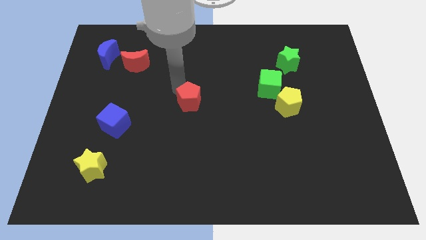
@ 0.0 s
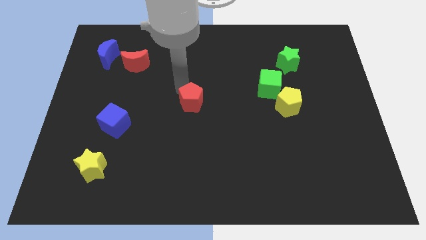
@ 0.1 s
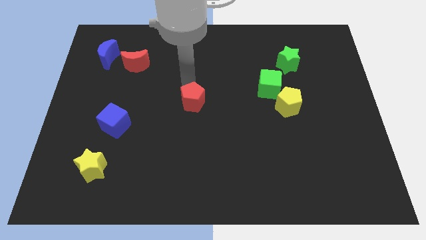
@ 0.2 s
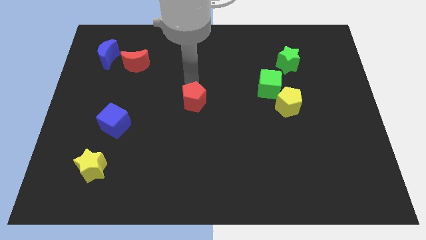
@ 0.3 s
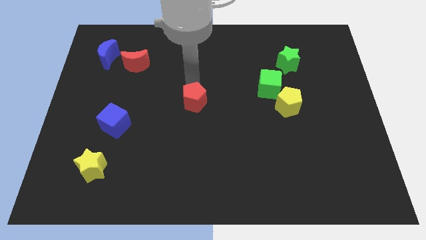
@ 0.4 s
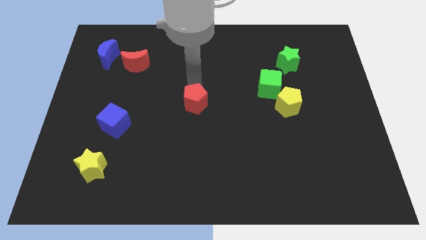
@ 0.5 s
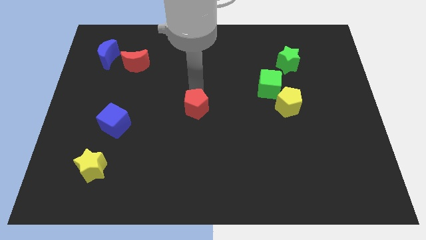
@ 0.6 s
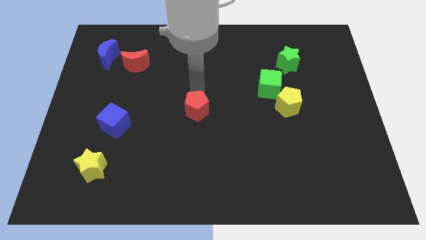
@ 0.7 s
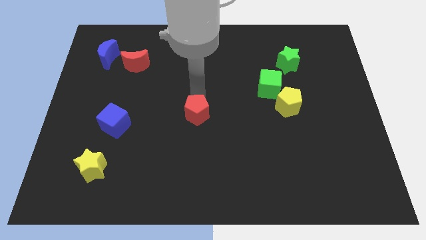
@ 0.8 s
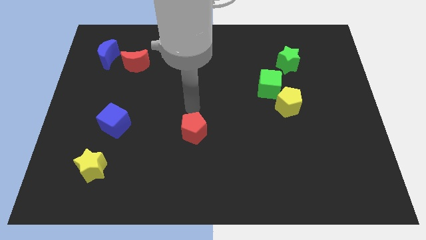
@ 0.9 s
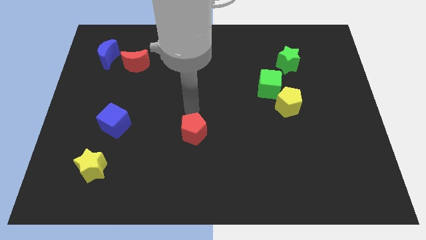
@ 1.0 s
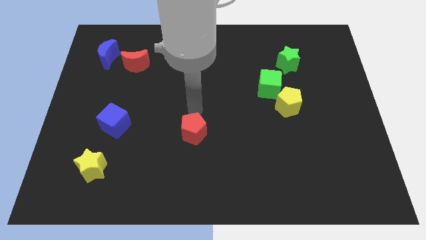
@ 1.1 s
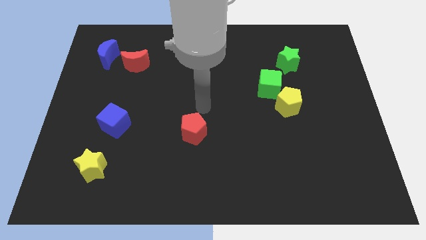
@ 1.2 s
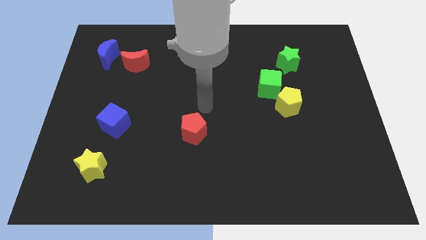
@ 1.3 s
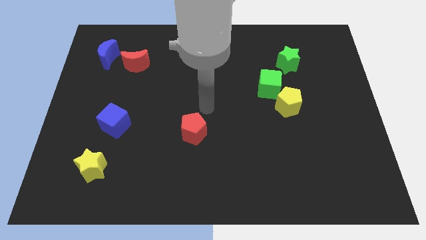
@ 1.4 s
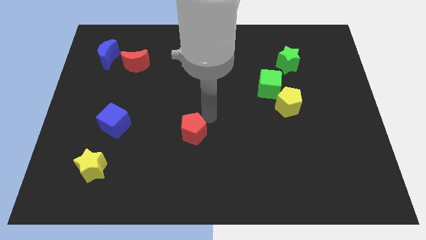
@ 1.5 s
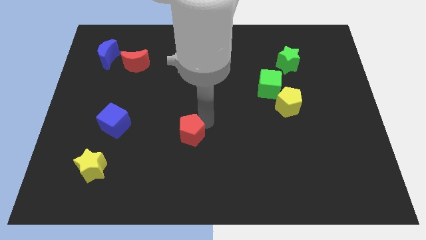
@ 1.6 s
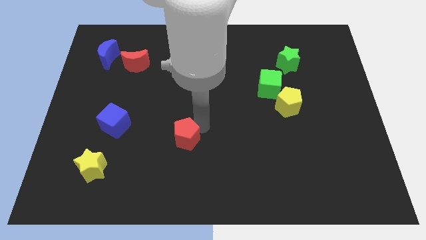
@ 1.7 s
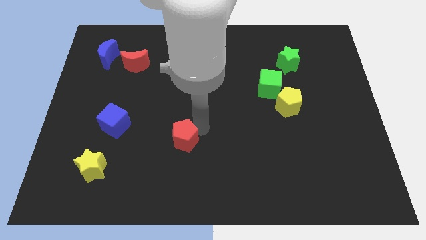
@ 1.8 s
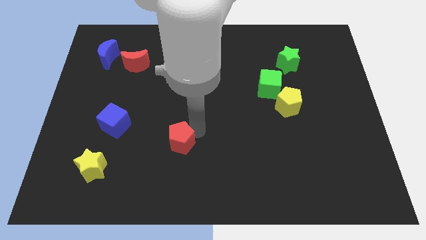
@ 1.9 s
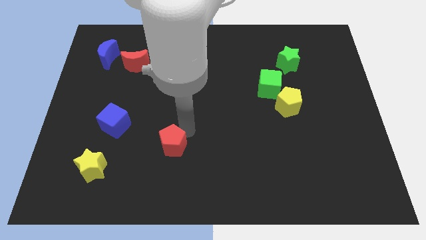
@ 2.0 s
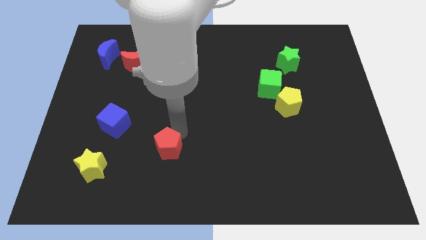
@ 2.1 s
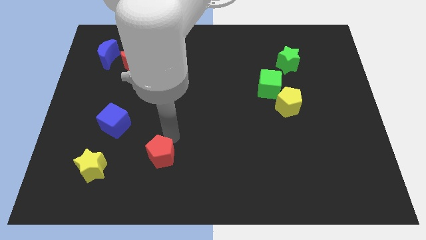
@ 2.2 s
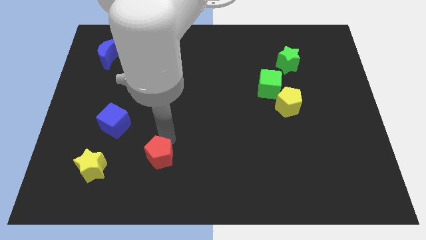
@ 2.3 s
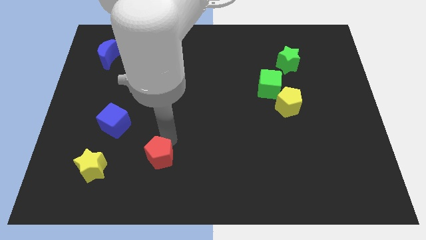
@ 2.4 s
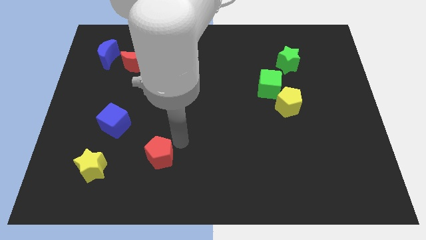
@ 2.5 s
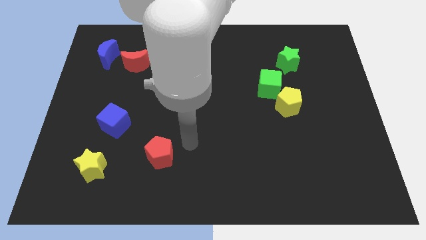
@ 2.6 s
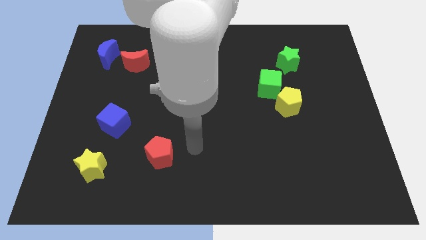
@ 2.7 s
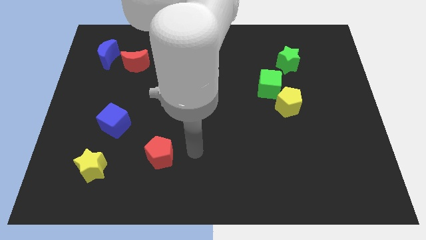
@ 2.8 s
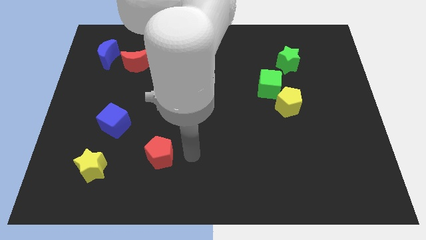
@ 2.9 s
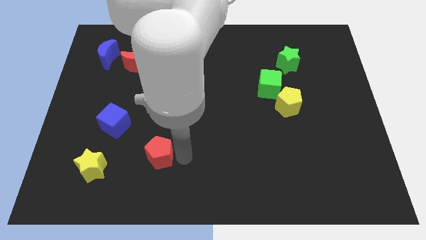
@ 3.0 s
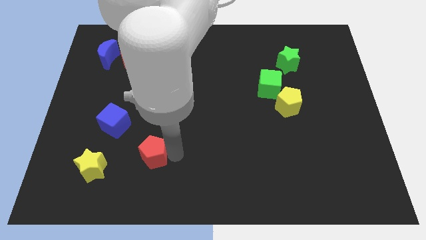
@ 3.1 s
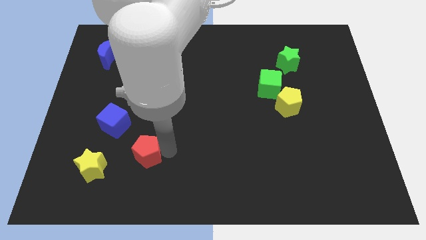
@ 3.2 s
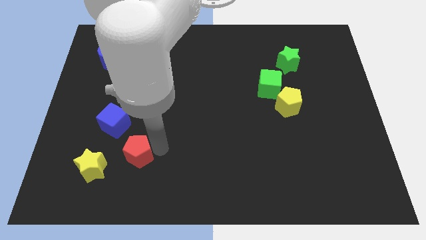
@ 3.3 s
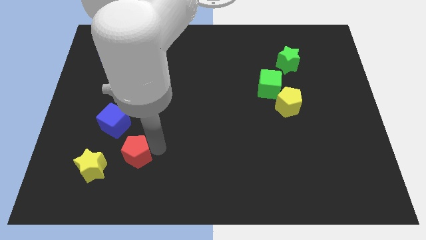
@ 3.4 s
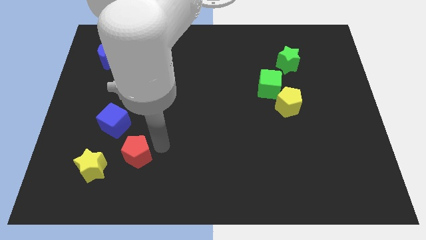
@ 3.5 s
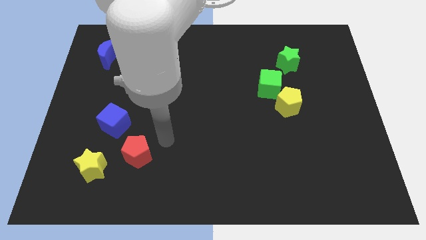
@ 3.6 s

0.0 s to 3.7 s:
move the red pentagon to the right of the yellow star

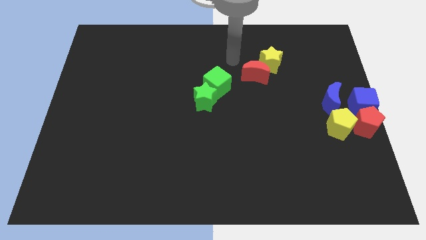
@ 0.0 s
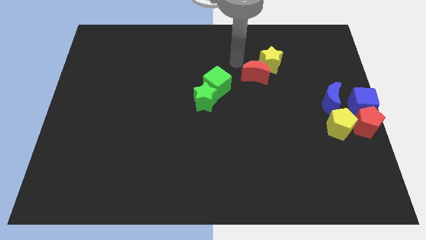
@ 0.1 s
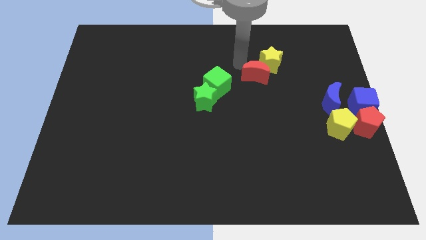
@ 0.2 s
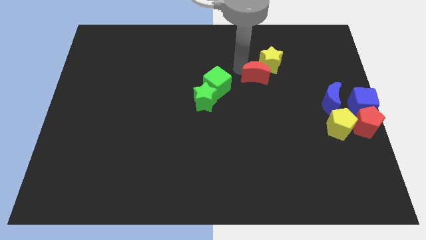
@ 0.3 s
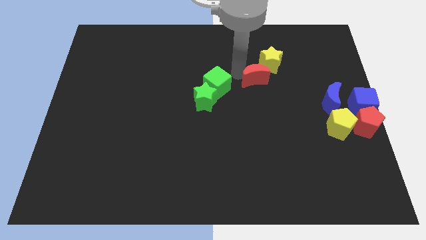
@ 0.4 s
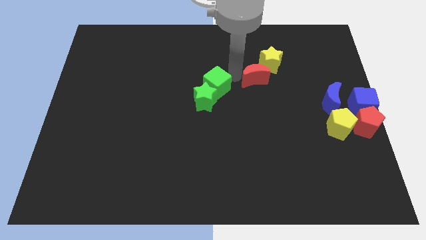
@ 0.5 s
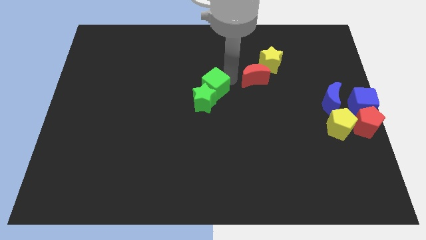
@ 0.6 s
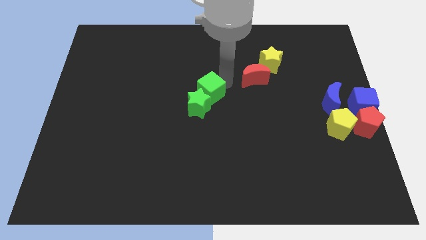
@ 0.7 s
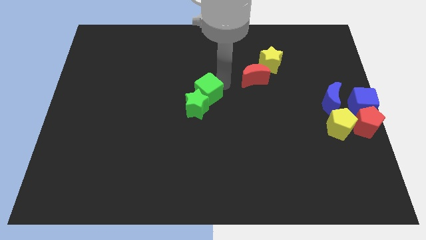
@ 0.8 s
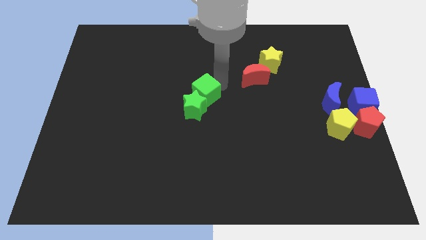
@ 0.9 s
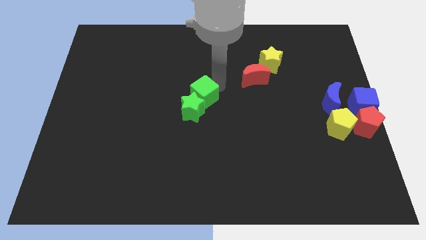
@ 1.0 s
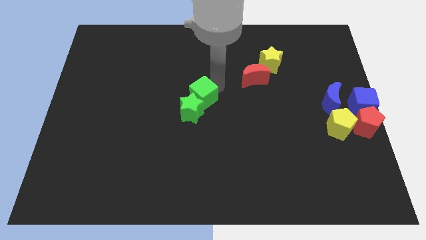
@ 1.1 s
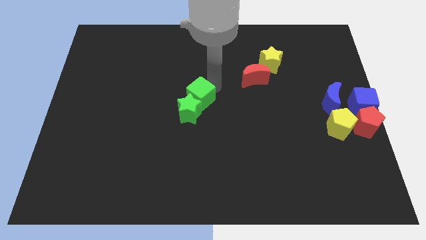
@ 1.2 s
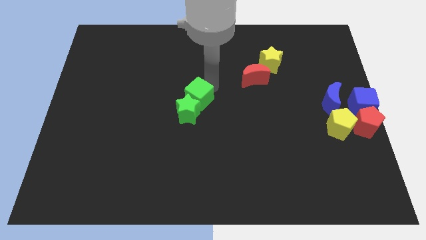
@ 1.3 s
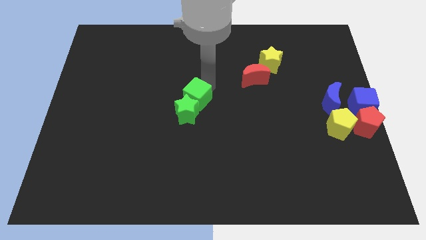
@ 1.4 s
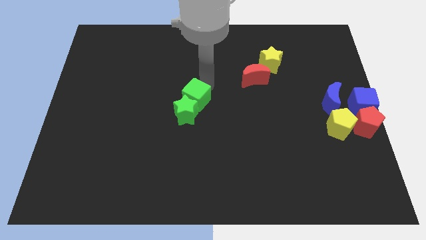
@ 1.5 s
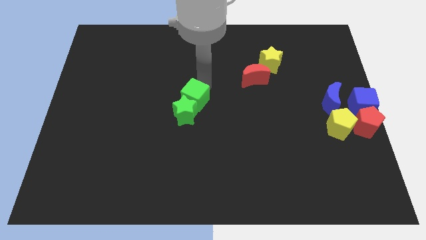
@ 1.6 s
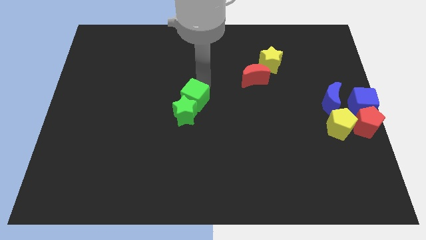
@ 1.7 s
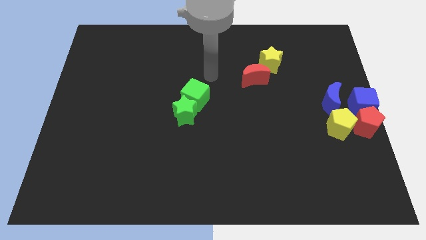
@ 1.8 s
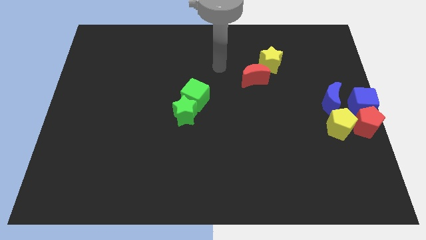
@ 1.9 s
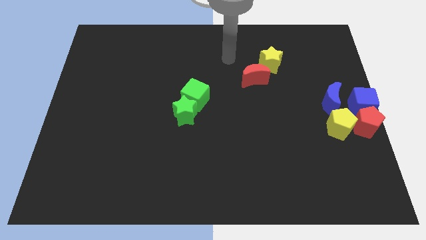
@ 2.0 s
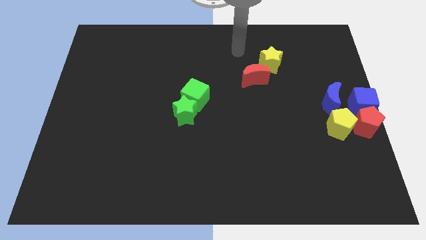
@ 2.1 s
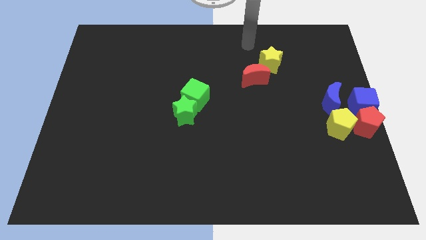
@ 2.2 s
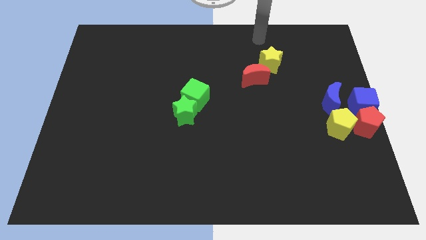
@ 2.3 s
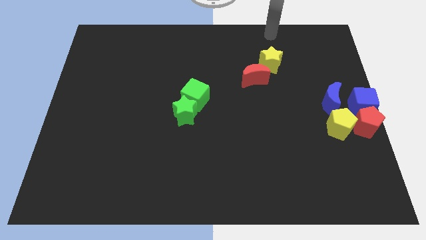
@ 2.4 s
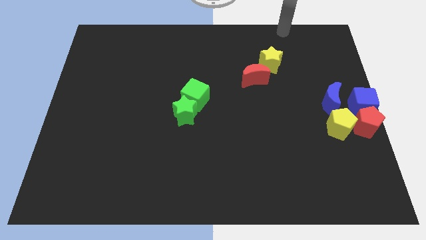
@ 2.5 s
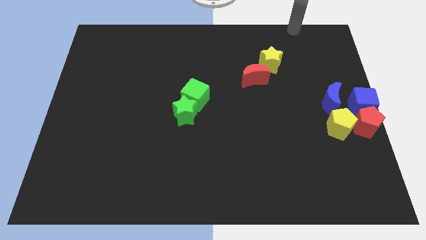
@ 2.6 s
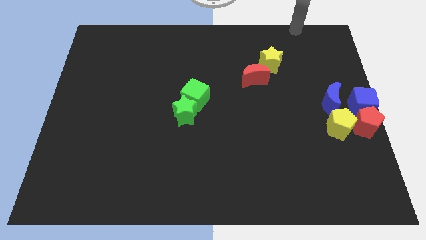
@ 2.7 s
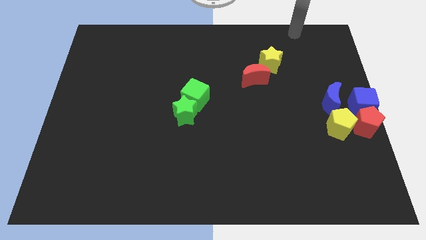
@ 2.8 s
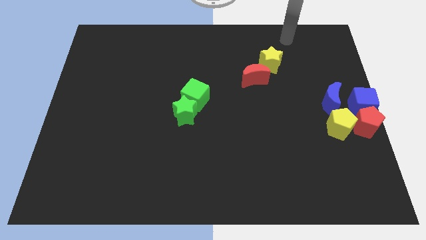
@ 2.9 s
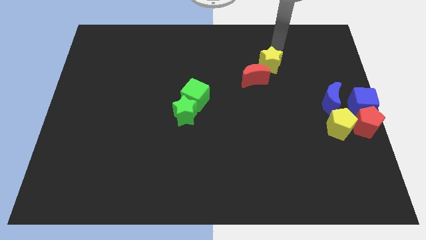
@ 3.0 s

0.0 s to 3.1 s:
push the green cube and the green star downwards

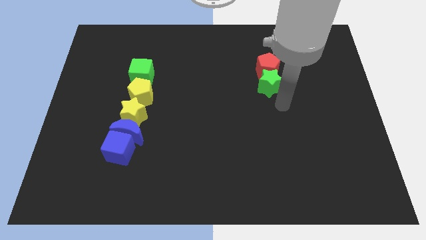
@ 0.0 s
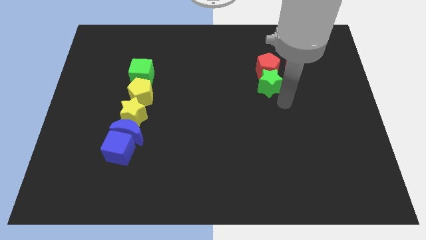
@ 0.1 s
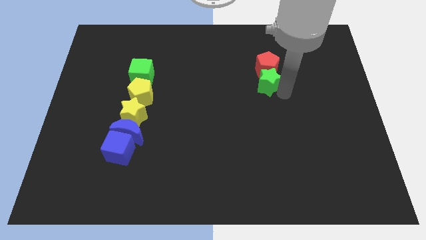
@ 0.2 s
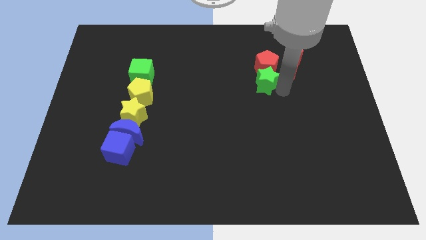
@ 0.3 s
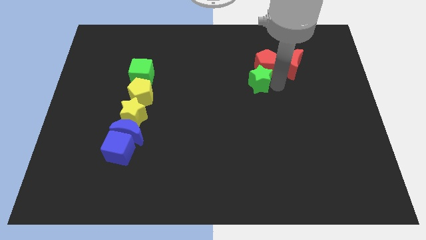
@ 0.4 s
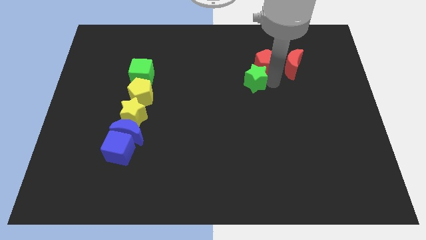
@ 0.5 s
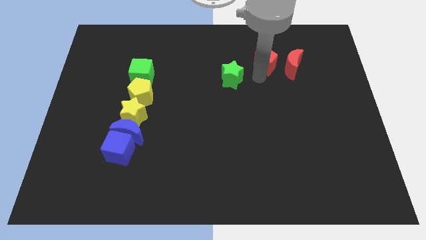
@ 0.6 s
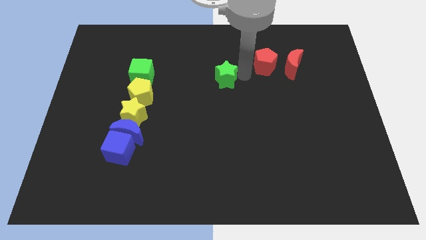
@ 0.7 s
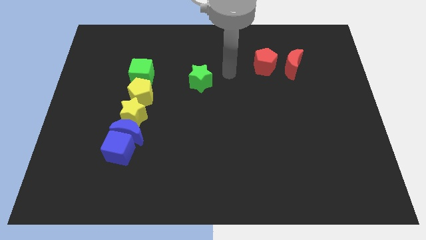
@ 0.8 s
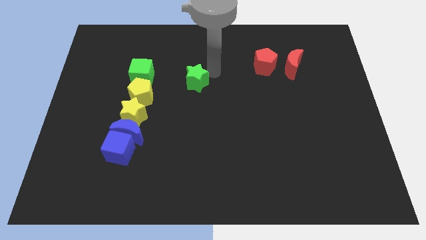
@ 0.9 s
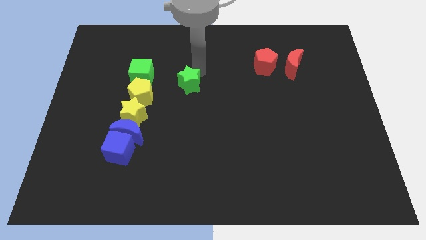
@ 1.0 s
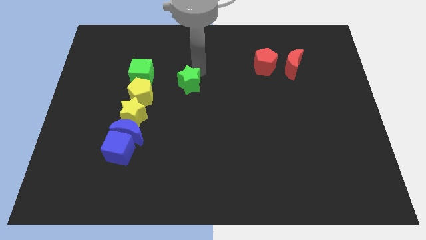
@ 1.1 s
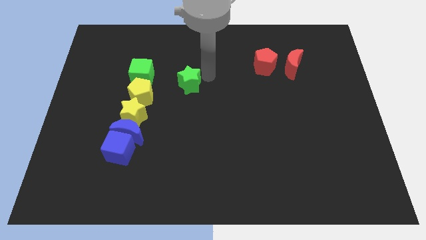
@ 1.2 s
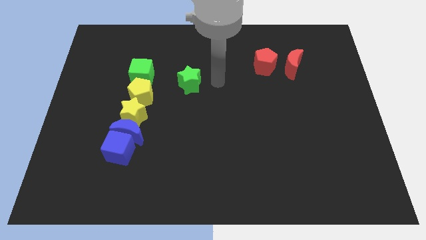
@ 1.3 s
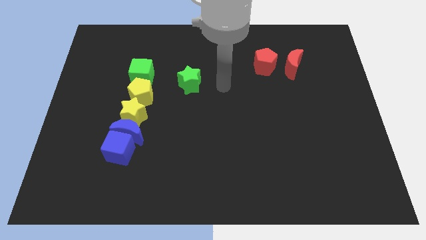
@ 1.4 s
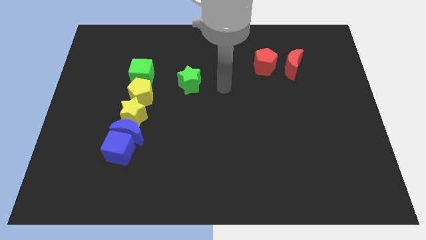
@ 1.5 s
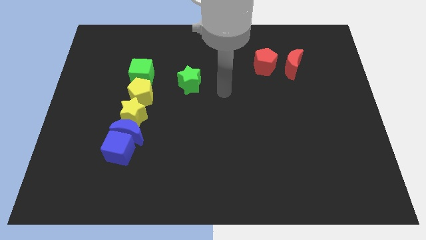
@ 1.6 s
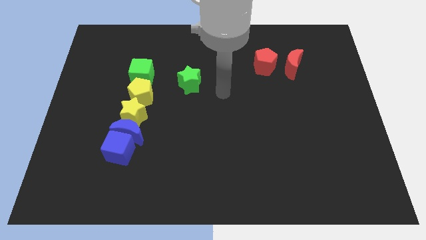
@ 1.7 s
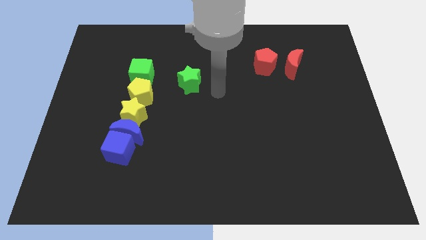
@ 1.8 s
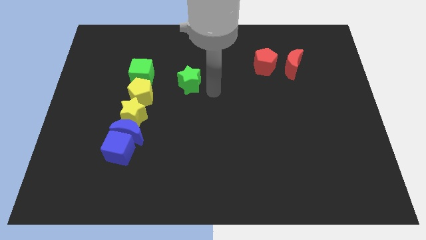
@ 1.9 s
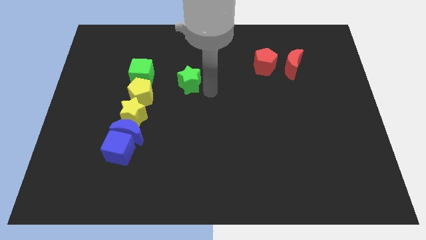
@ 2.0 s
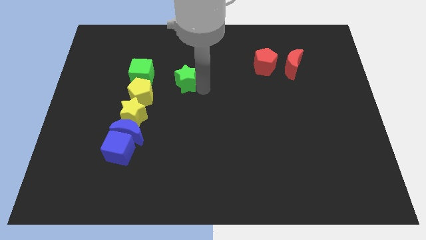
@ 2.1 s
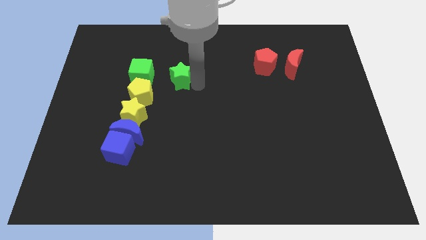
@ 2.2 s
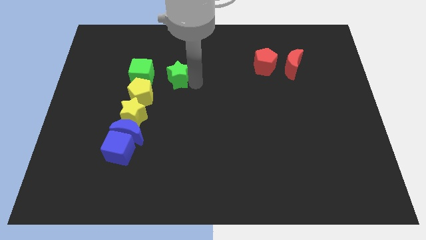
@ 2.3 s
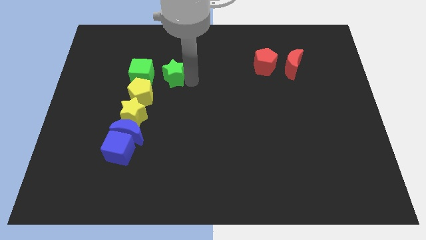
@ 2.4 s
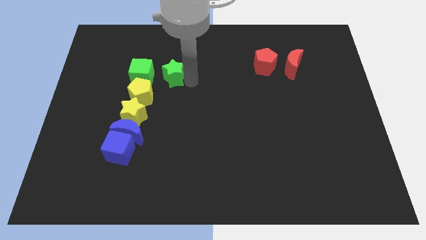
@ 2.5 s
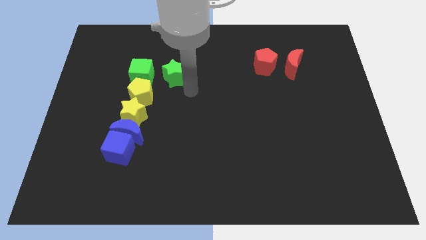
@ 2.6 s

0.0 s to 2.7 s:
separate the green star from the red pentagon
